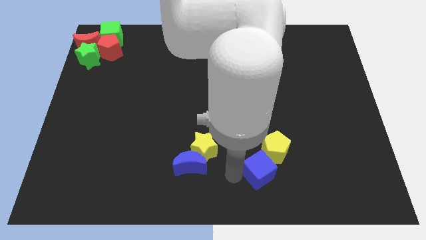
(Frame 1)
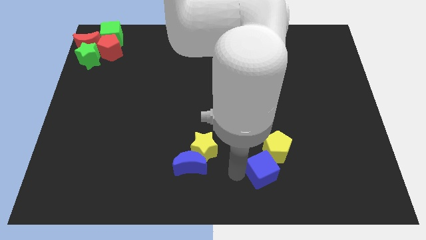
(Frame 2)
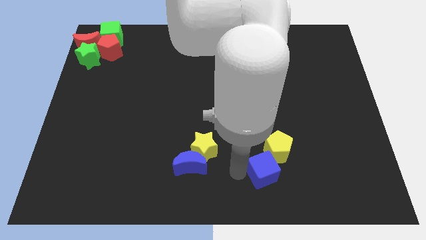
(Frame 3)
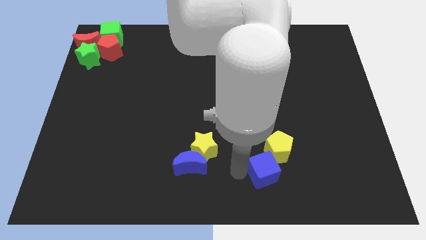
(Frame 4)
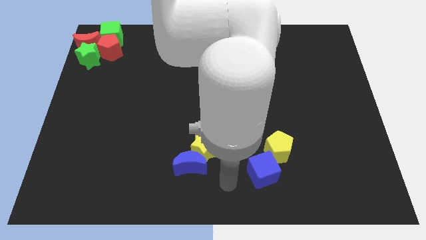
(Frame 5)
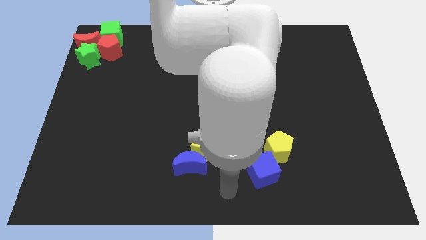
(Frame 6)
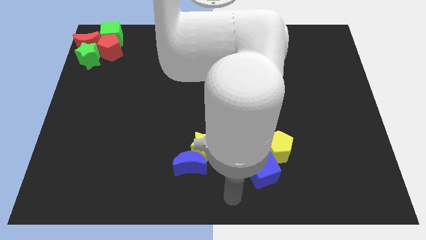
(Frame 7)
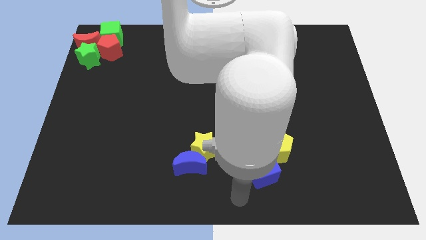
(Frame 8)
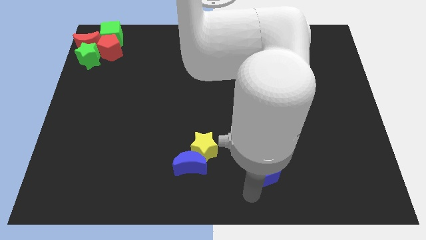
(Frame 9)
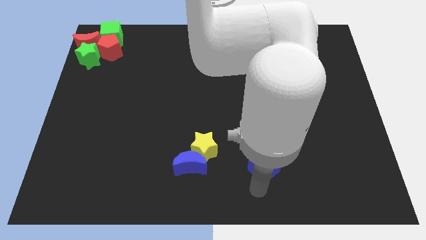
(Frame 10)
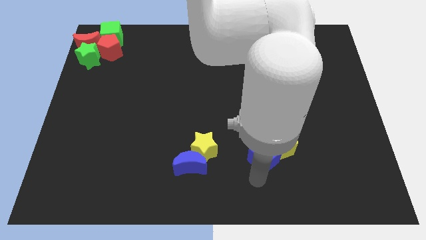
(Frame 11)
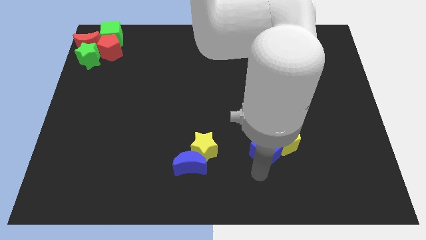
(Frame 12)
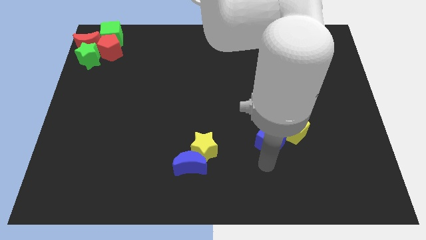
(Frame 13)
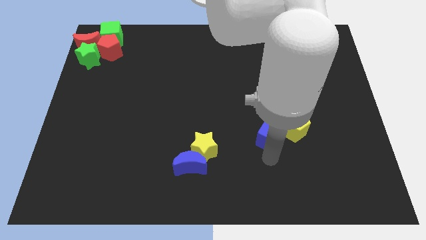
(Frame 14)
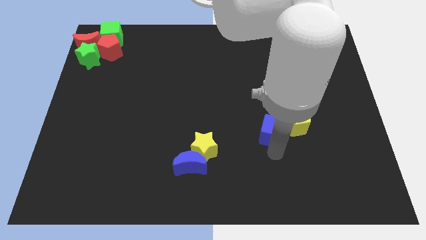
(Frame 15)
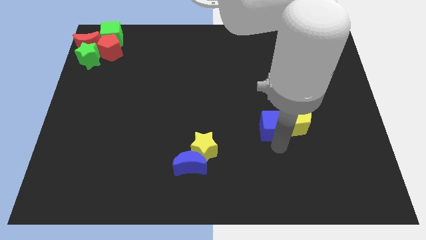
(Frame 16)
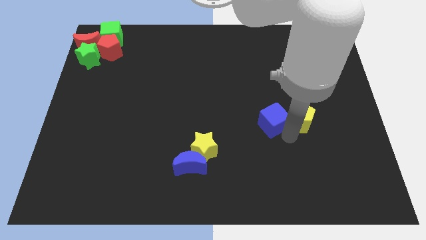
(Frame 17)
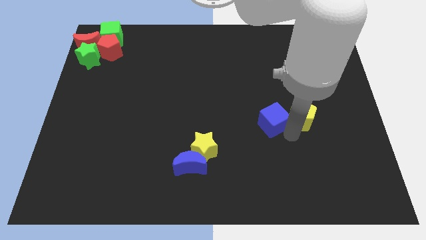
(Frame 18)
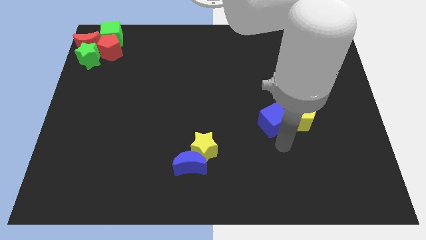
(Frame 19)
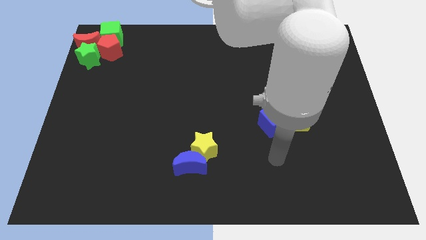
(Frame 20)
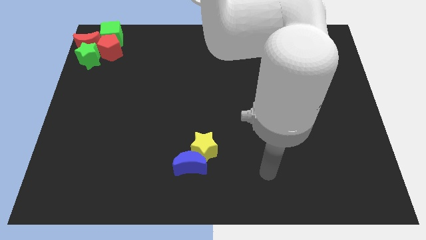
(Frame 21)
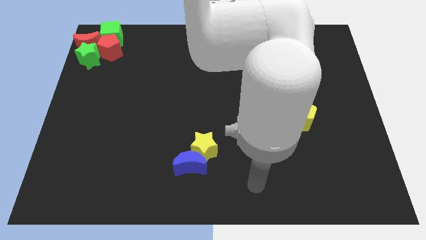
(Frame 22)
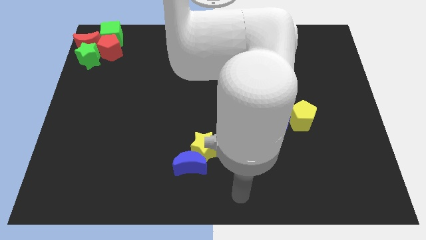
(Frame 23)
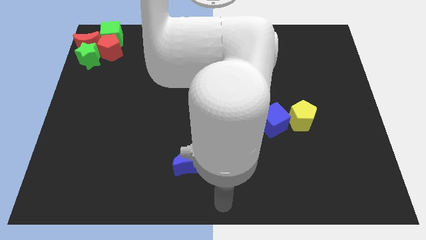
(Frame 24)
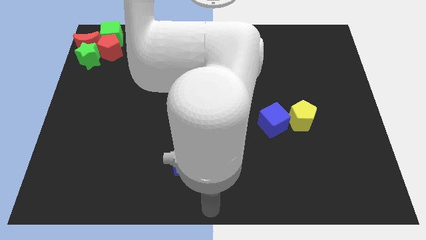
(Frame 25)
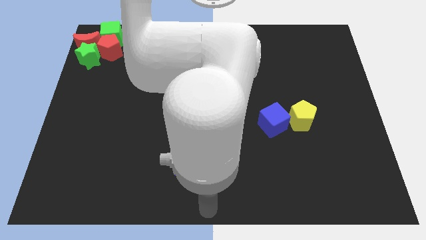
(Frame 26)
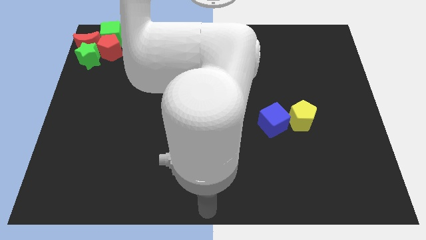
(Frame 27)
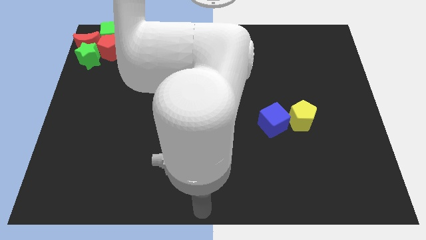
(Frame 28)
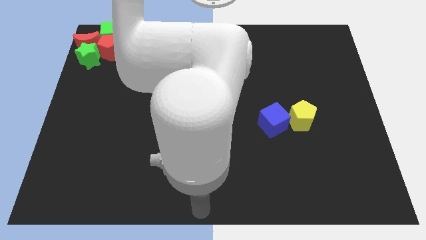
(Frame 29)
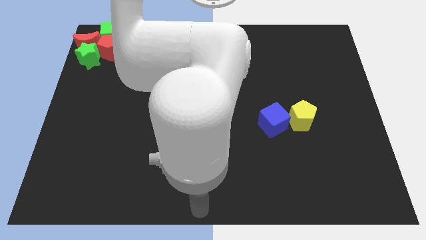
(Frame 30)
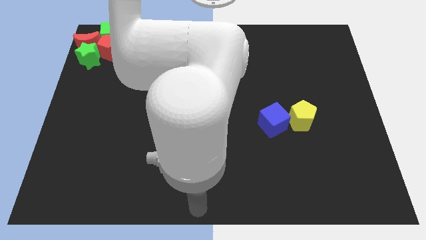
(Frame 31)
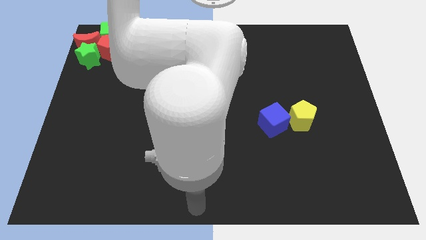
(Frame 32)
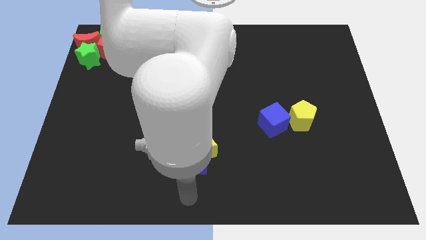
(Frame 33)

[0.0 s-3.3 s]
place the blue cube and yellow pentagon at the top right side of the yellow star

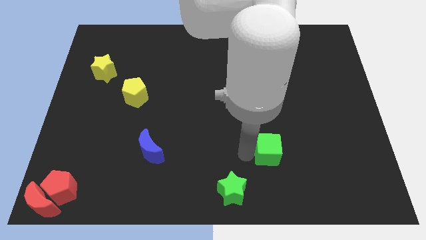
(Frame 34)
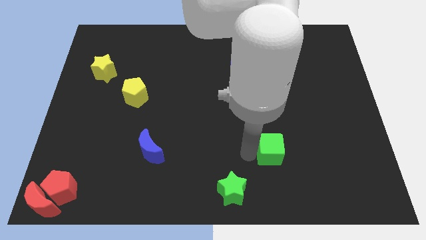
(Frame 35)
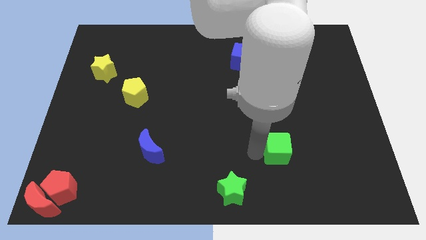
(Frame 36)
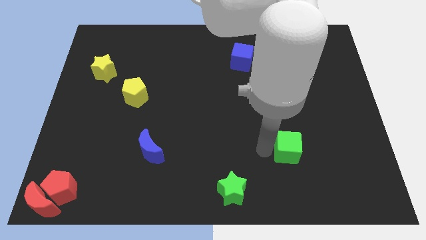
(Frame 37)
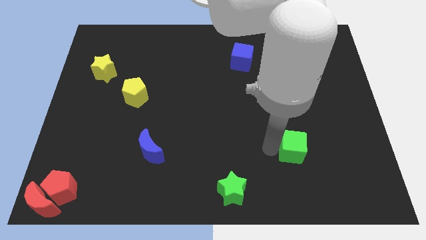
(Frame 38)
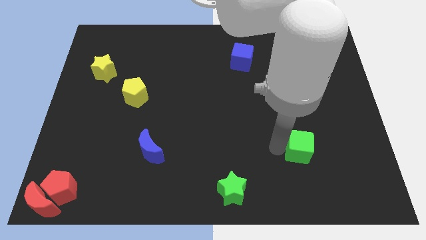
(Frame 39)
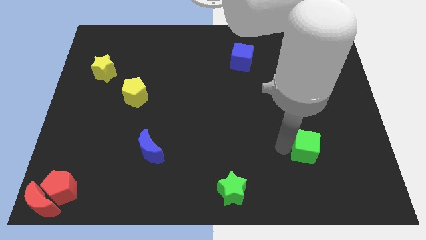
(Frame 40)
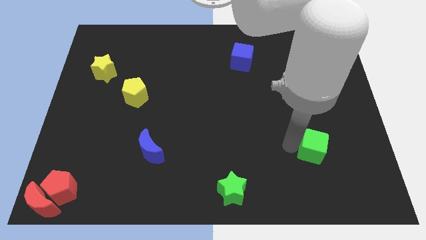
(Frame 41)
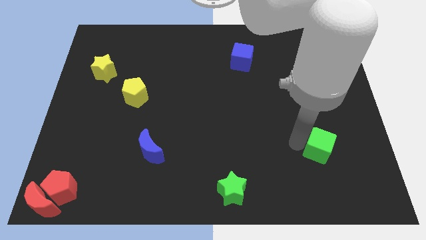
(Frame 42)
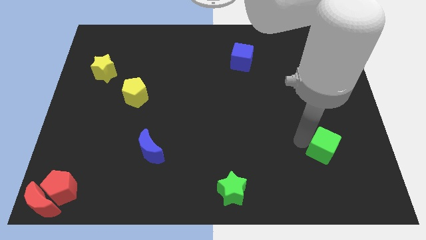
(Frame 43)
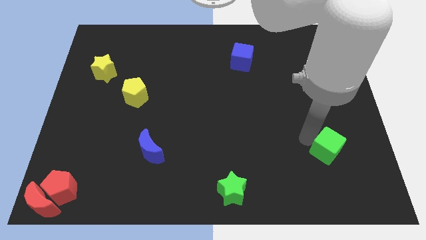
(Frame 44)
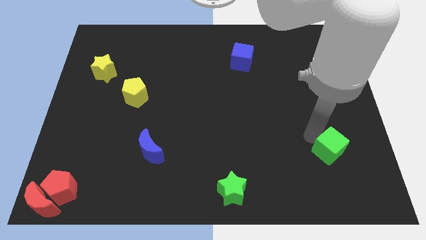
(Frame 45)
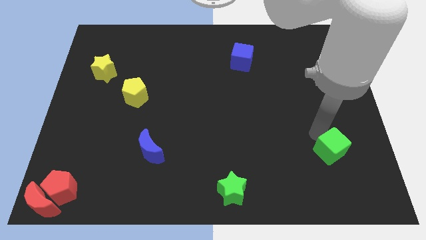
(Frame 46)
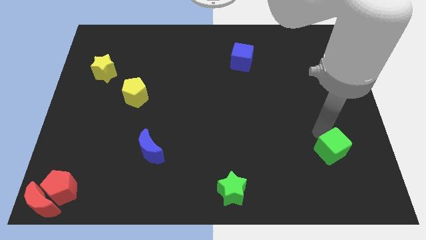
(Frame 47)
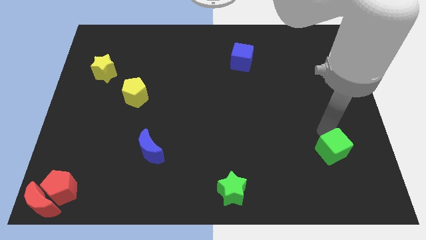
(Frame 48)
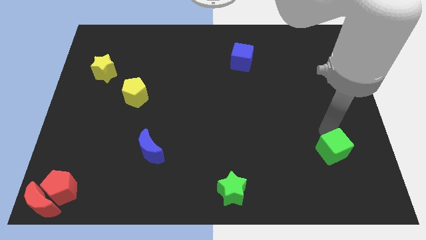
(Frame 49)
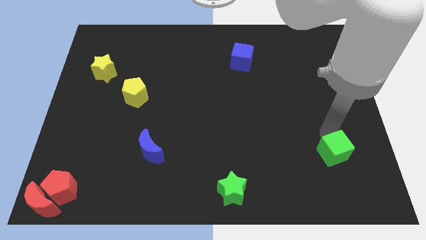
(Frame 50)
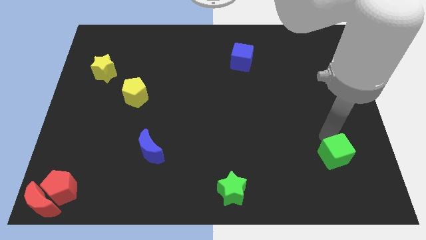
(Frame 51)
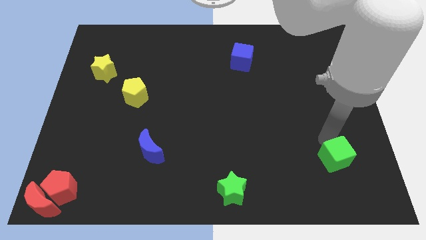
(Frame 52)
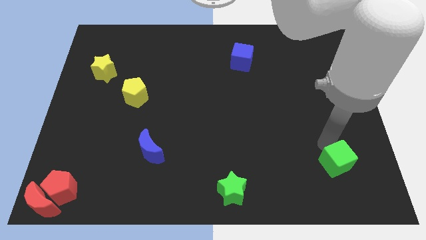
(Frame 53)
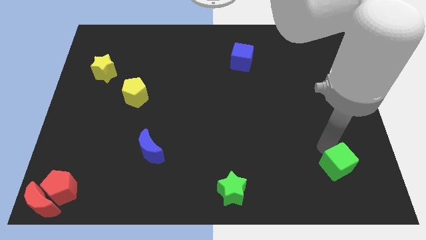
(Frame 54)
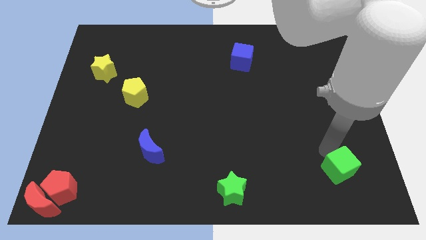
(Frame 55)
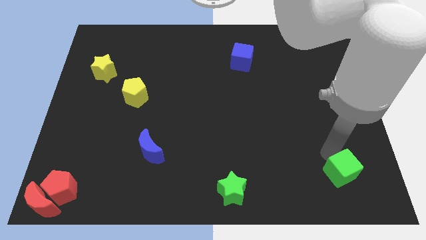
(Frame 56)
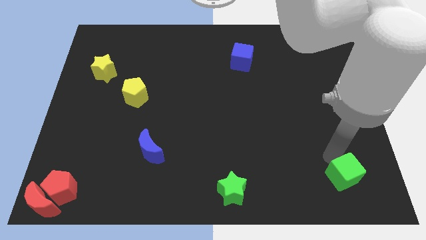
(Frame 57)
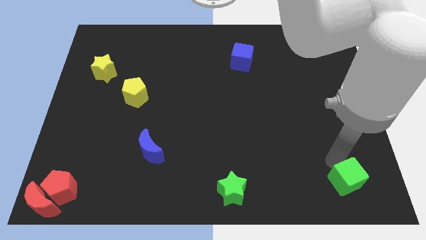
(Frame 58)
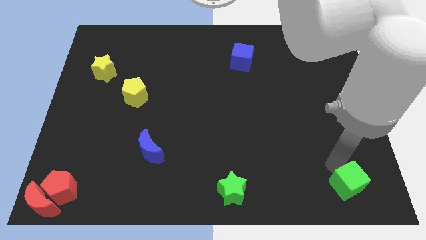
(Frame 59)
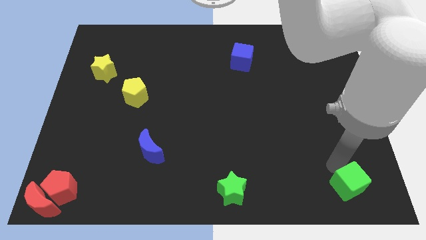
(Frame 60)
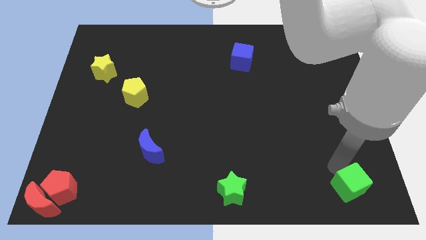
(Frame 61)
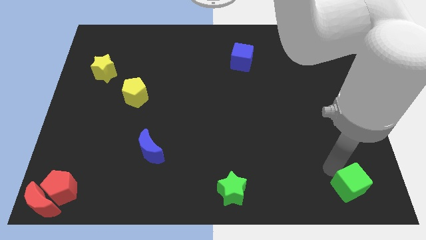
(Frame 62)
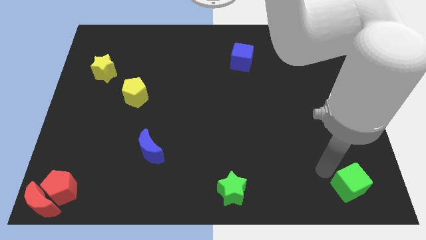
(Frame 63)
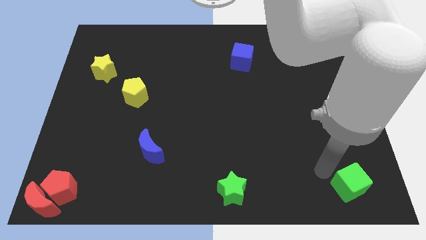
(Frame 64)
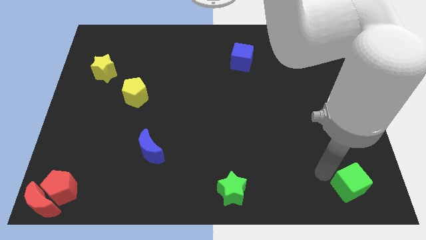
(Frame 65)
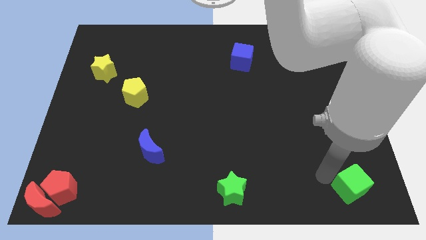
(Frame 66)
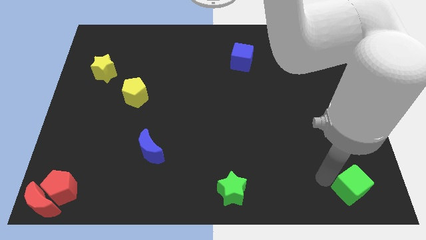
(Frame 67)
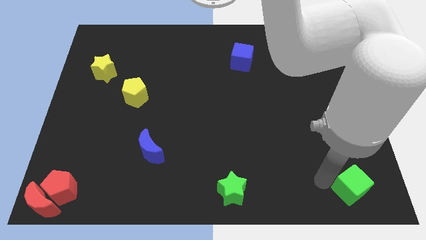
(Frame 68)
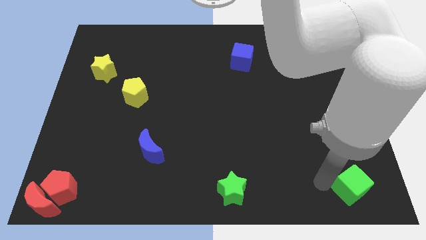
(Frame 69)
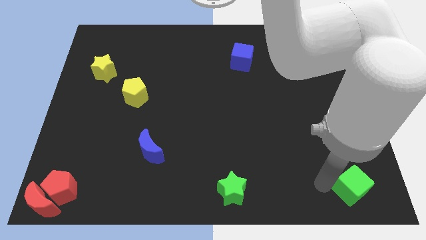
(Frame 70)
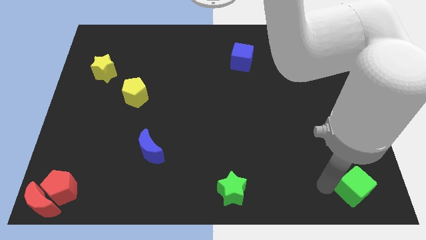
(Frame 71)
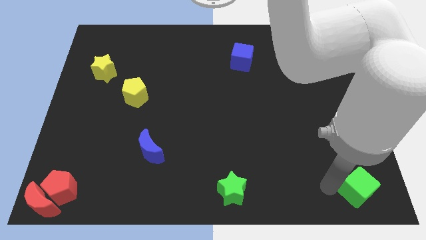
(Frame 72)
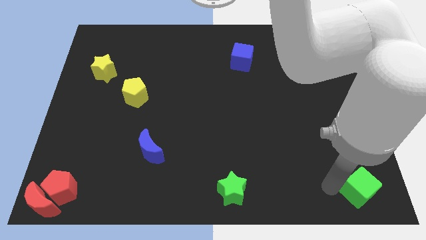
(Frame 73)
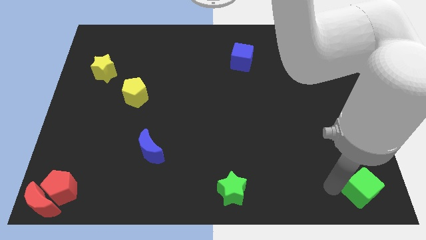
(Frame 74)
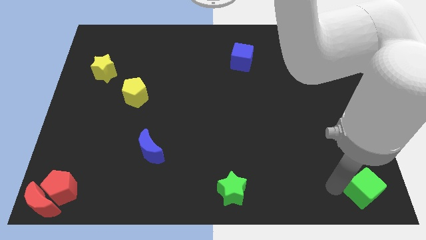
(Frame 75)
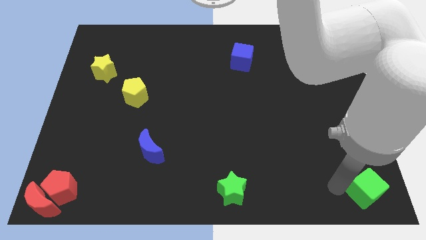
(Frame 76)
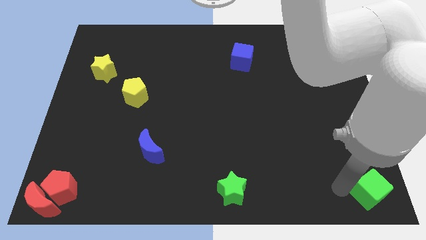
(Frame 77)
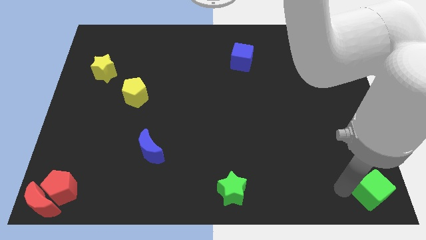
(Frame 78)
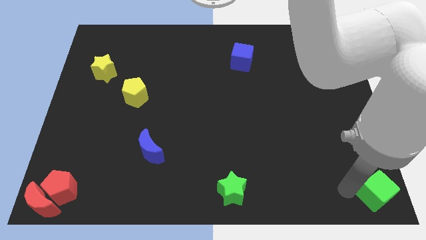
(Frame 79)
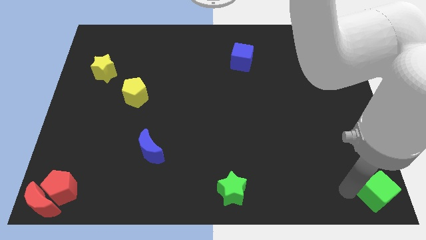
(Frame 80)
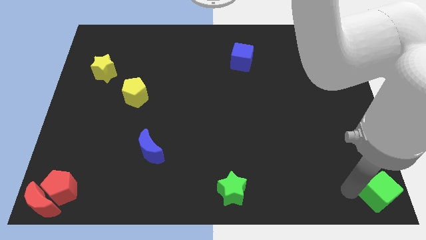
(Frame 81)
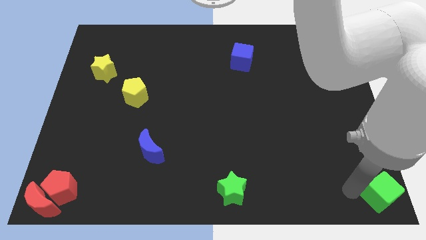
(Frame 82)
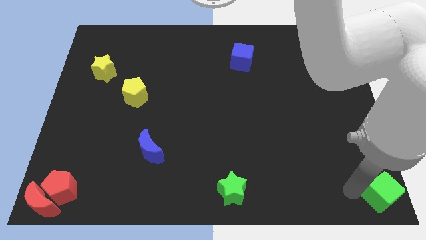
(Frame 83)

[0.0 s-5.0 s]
move the green cube to the bottom right of the board

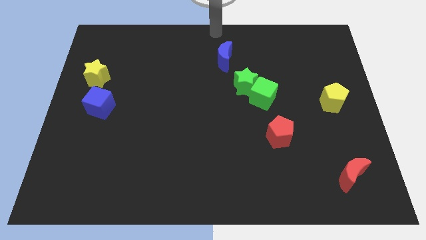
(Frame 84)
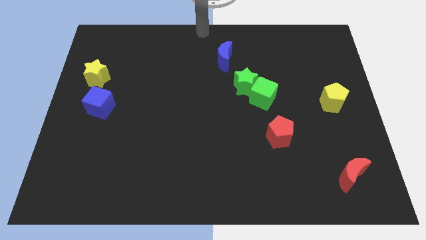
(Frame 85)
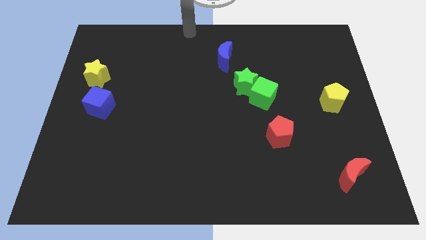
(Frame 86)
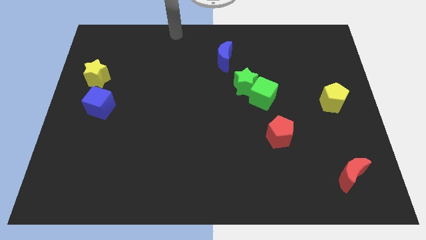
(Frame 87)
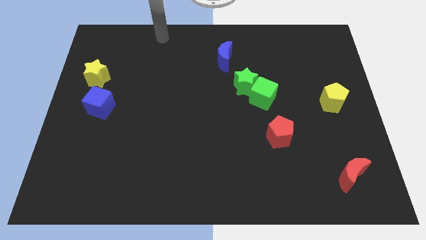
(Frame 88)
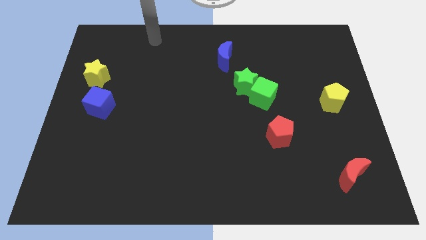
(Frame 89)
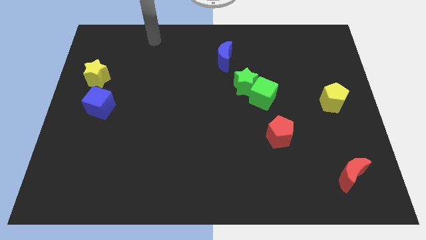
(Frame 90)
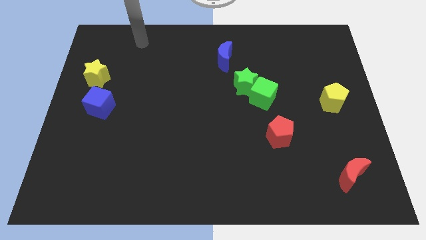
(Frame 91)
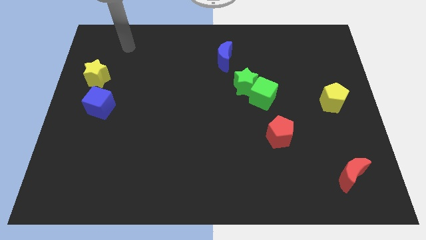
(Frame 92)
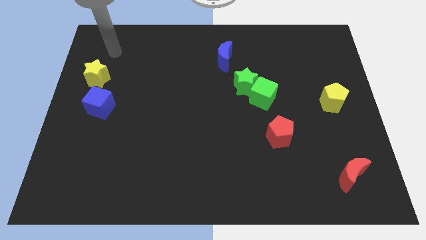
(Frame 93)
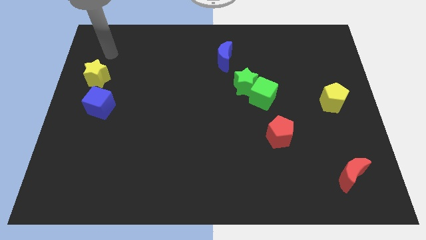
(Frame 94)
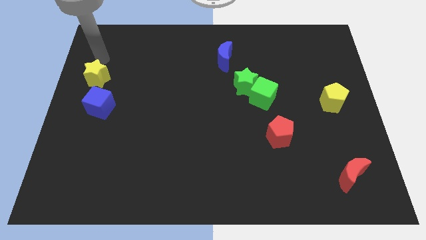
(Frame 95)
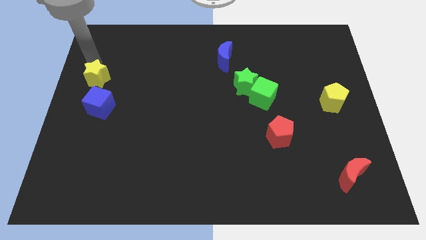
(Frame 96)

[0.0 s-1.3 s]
slide your arm vertically above the yellow star
